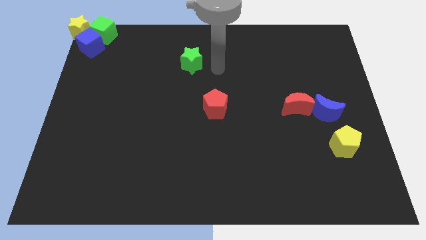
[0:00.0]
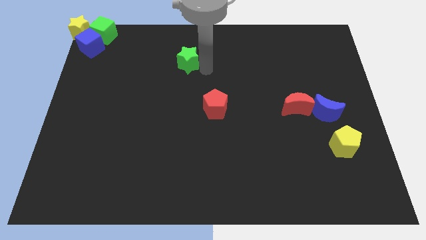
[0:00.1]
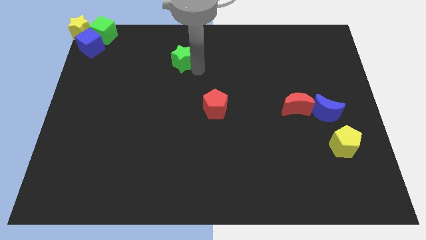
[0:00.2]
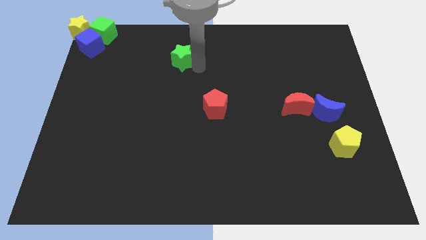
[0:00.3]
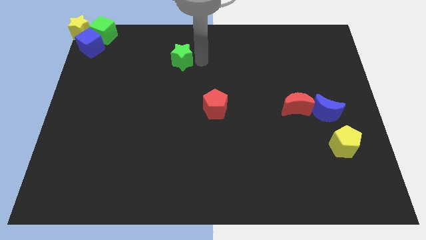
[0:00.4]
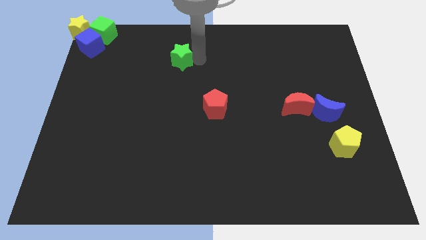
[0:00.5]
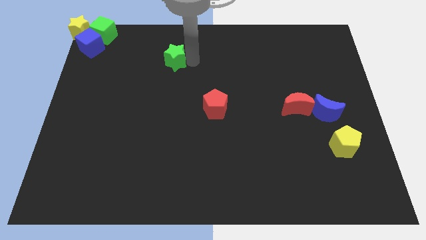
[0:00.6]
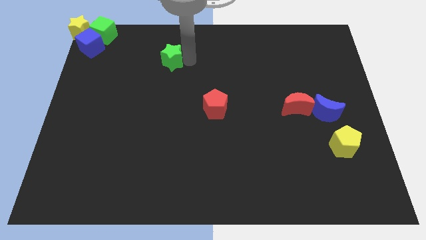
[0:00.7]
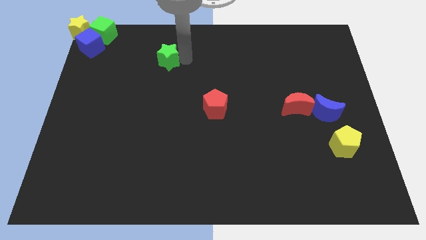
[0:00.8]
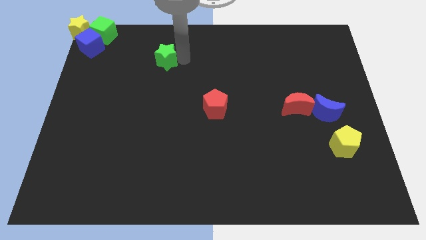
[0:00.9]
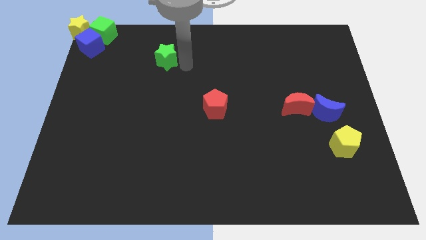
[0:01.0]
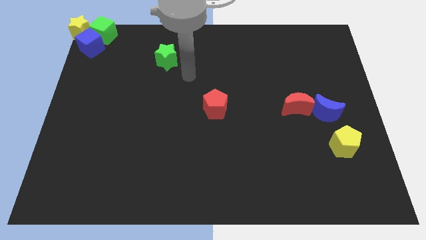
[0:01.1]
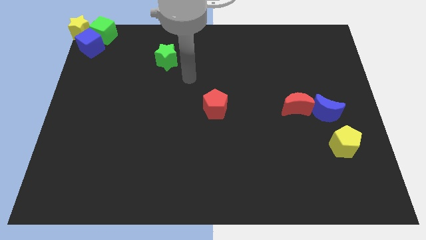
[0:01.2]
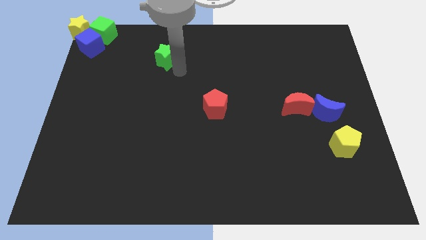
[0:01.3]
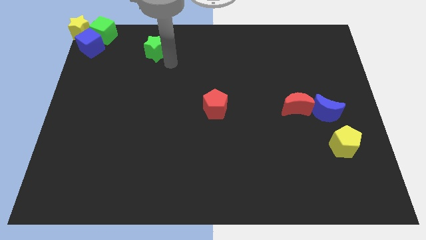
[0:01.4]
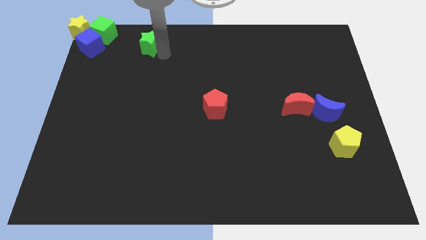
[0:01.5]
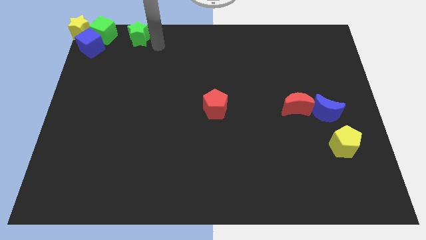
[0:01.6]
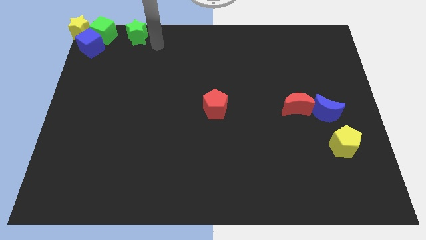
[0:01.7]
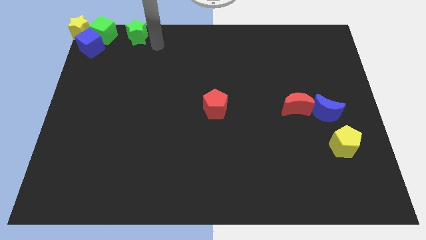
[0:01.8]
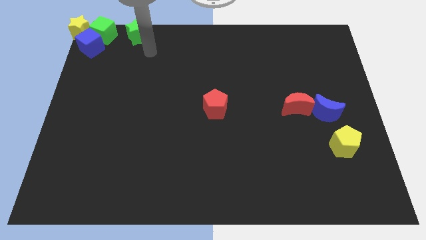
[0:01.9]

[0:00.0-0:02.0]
push the green star to the right of the green cube

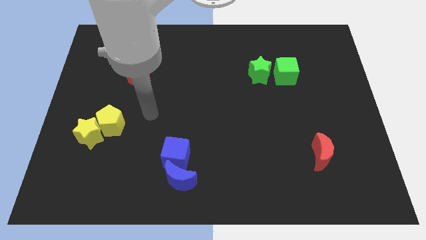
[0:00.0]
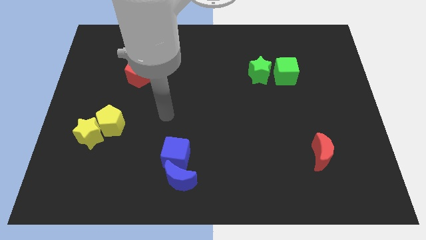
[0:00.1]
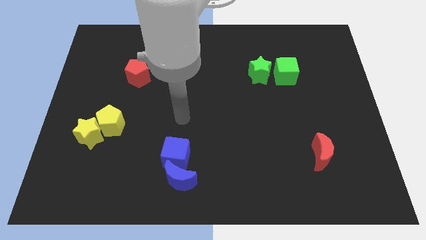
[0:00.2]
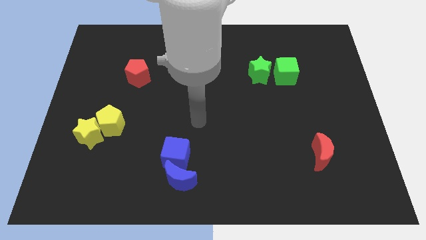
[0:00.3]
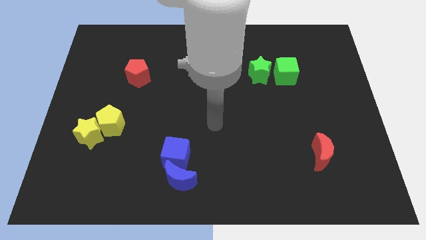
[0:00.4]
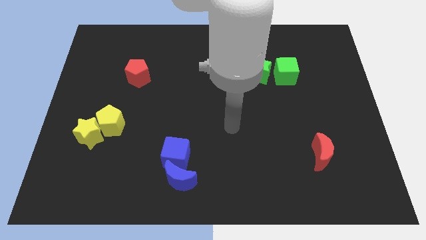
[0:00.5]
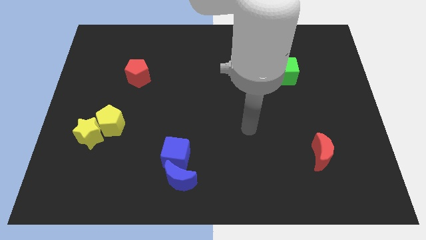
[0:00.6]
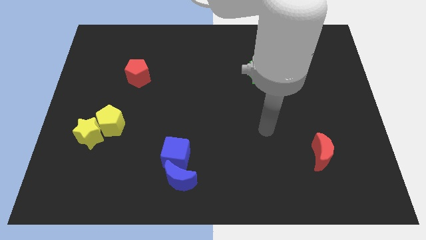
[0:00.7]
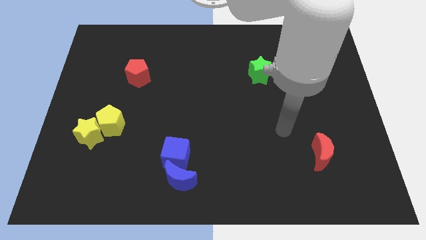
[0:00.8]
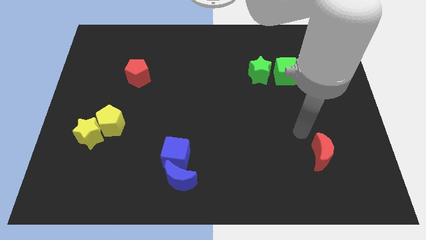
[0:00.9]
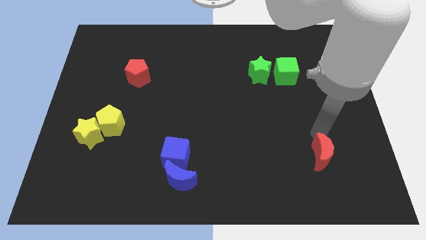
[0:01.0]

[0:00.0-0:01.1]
move your arm to the top of red moon

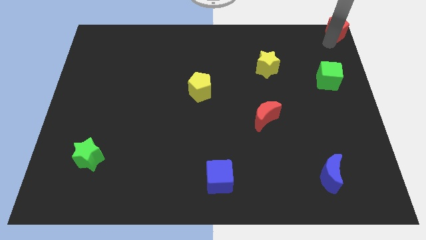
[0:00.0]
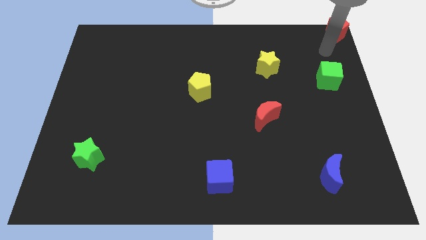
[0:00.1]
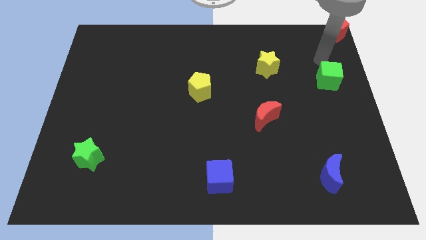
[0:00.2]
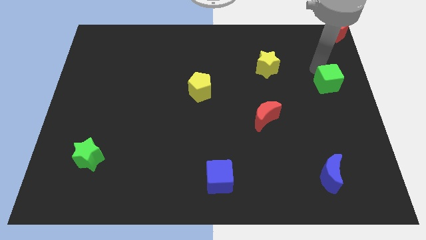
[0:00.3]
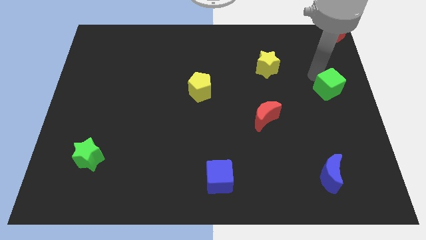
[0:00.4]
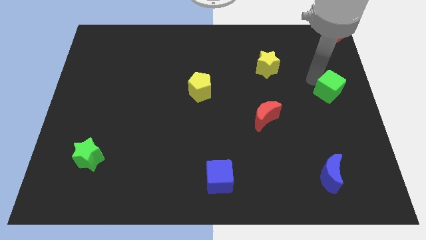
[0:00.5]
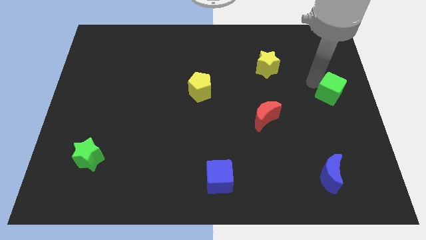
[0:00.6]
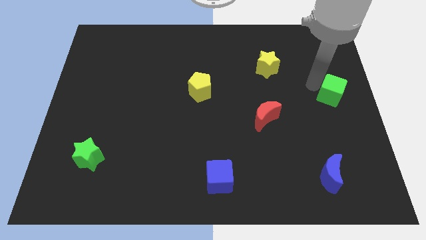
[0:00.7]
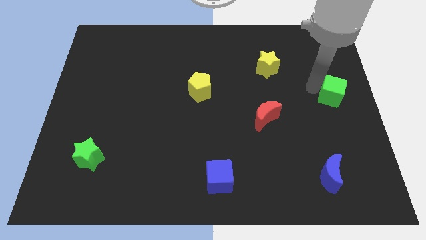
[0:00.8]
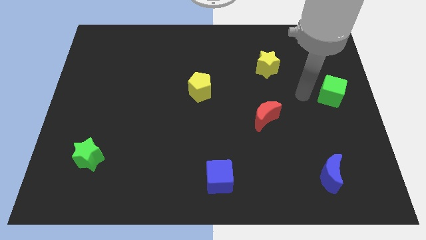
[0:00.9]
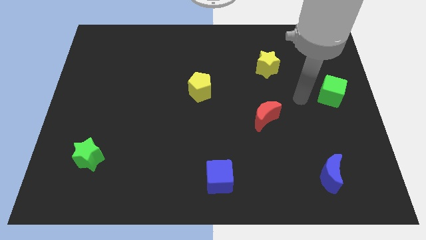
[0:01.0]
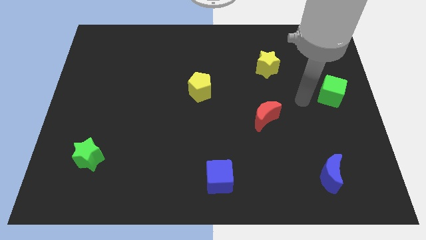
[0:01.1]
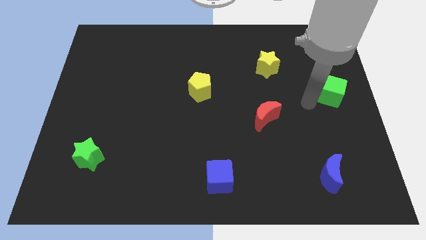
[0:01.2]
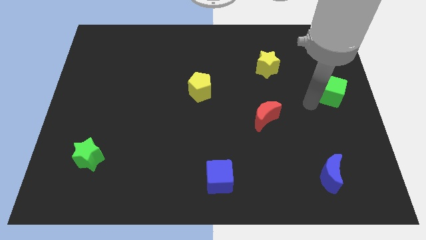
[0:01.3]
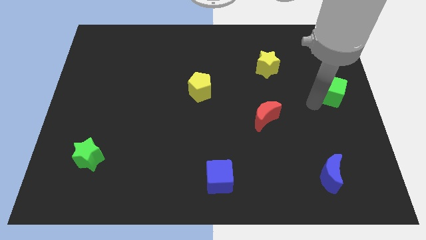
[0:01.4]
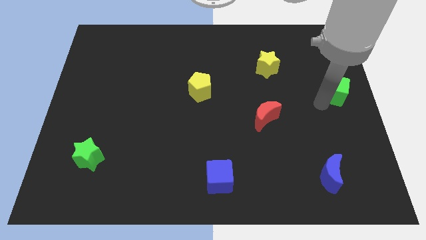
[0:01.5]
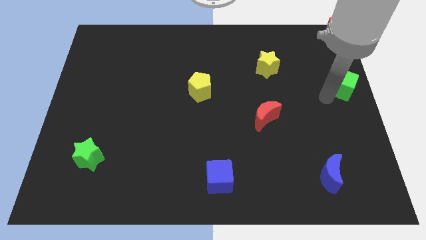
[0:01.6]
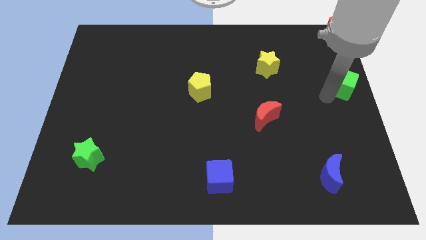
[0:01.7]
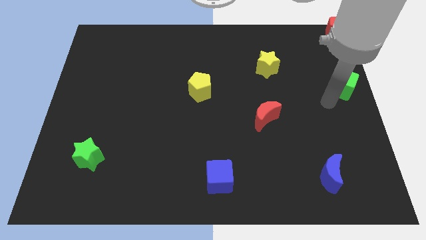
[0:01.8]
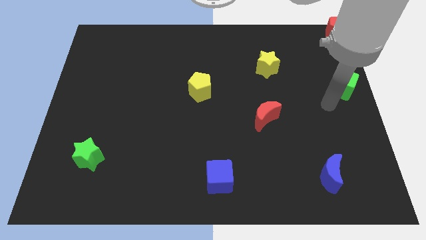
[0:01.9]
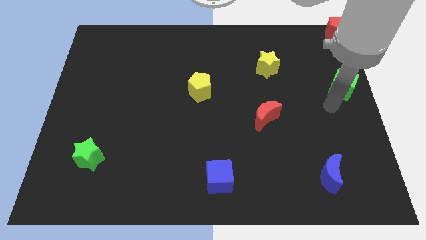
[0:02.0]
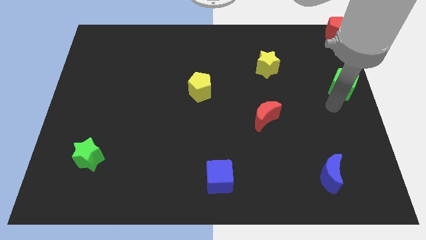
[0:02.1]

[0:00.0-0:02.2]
drag the green cube towards the red pentagon

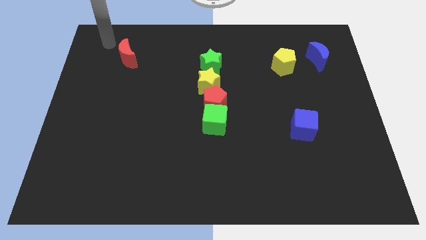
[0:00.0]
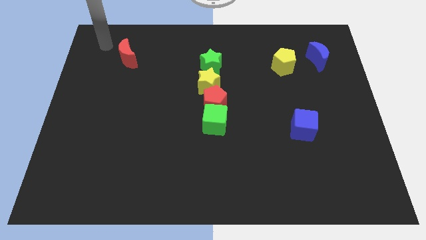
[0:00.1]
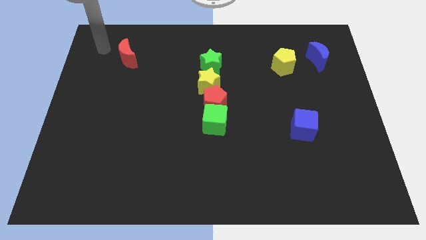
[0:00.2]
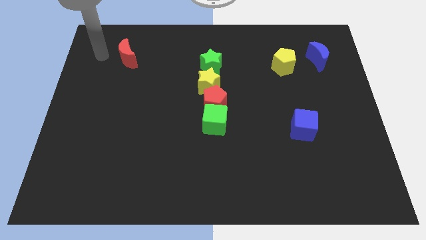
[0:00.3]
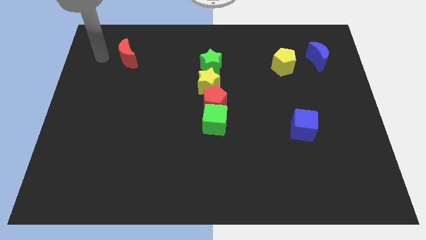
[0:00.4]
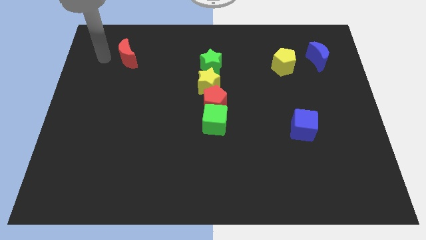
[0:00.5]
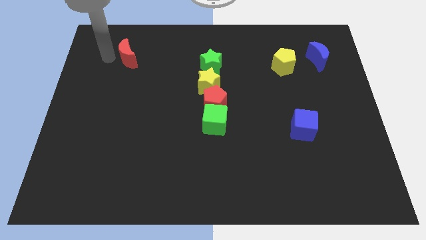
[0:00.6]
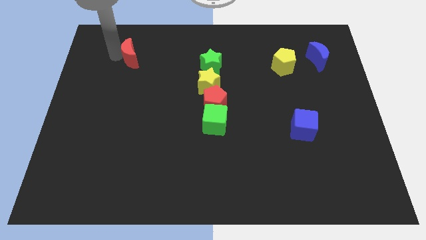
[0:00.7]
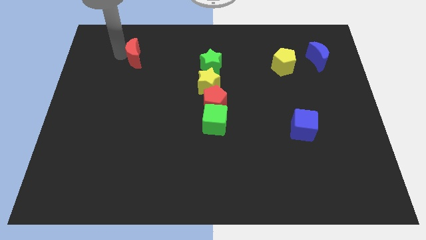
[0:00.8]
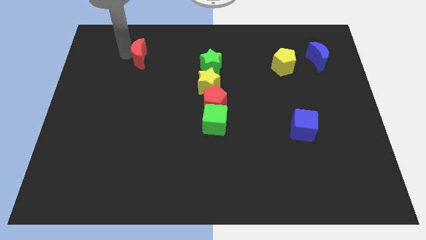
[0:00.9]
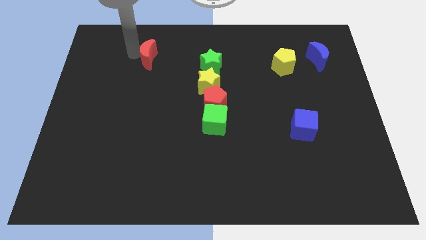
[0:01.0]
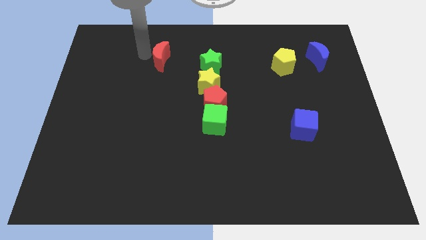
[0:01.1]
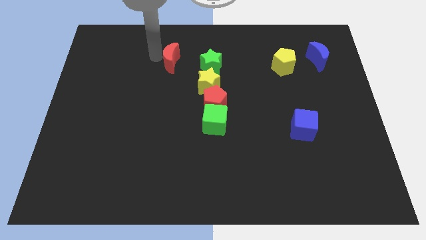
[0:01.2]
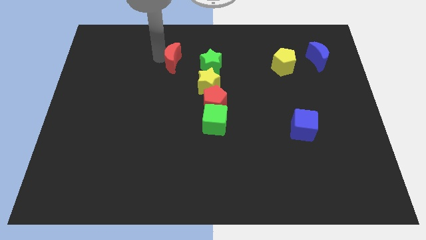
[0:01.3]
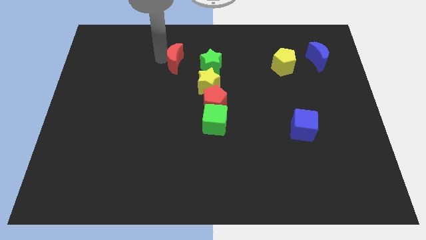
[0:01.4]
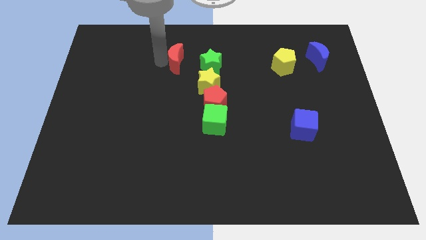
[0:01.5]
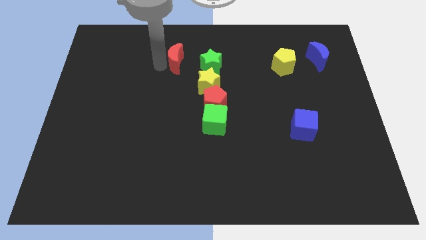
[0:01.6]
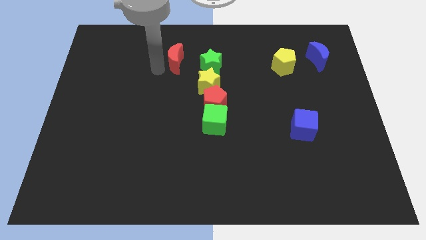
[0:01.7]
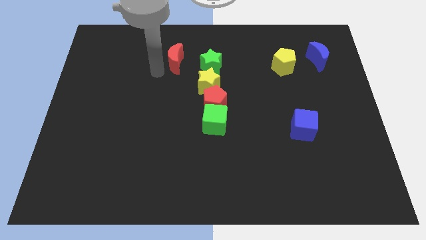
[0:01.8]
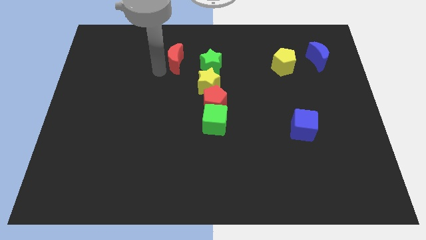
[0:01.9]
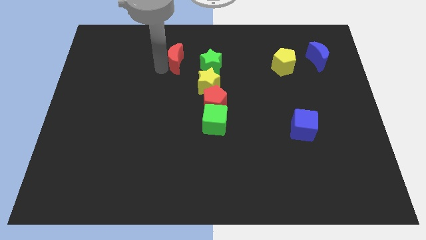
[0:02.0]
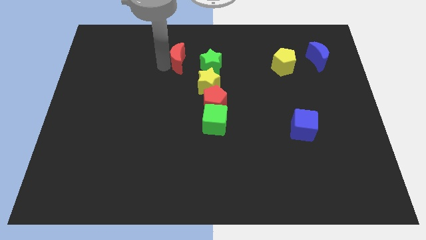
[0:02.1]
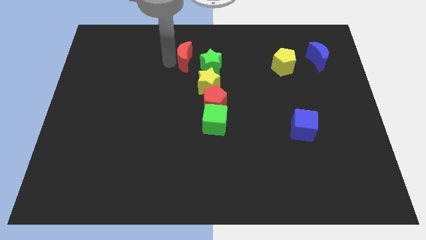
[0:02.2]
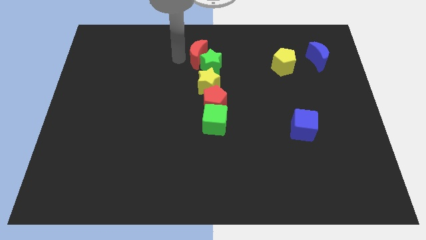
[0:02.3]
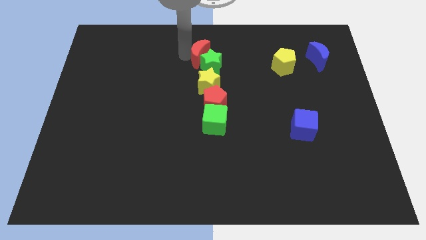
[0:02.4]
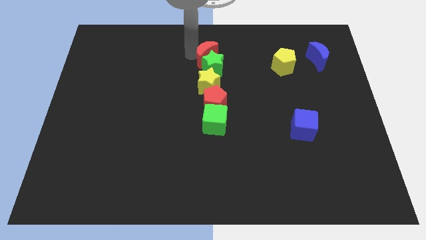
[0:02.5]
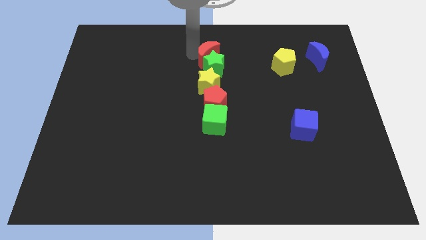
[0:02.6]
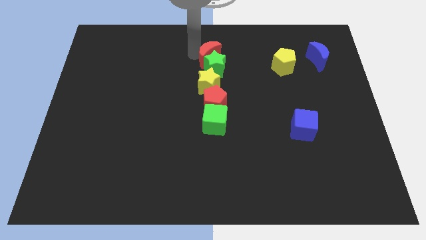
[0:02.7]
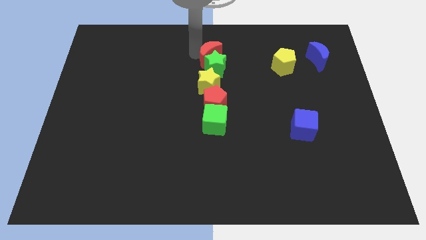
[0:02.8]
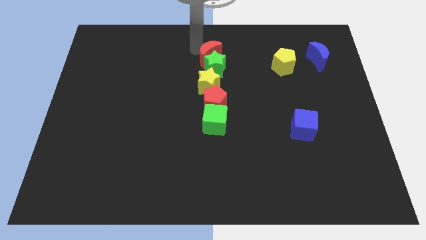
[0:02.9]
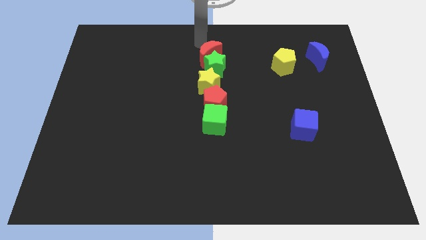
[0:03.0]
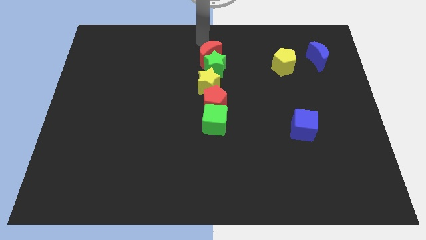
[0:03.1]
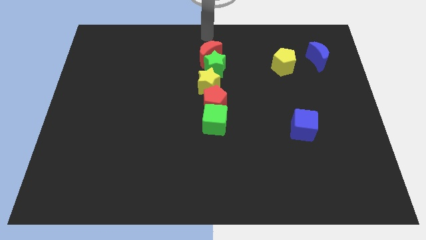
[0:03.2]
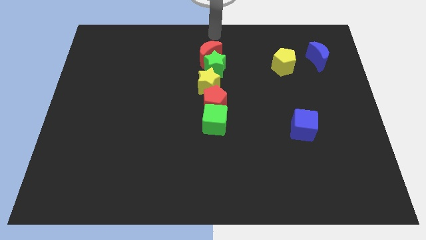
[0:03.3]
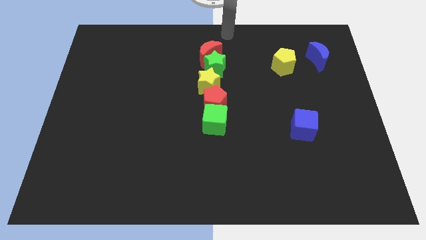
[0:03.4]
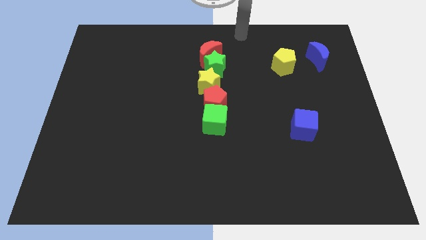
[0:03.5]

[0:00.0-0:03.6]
place the red moon above the green star
